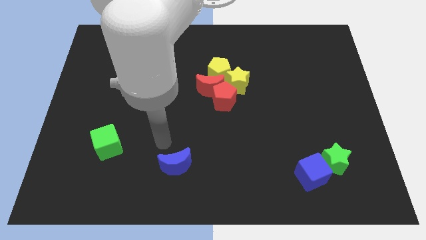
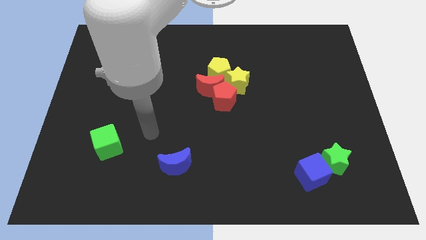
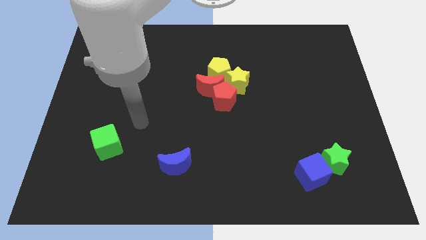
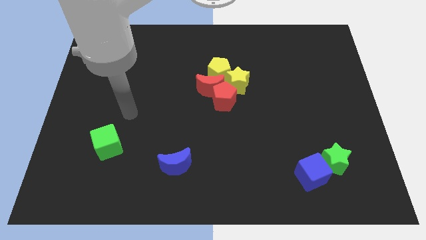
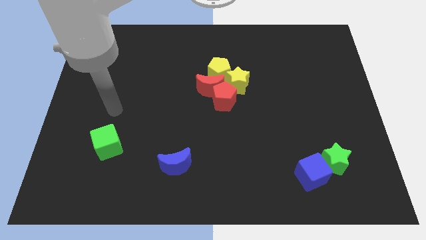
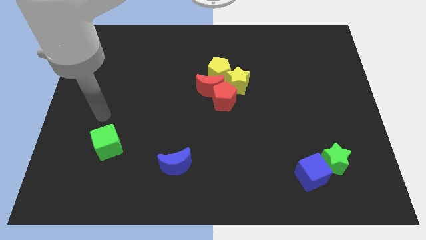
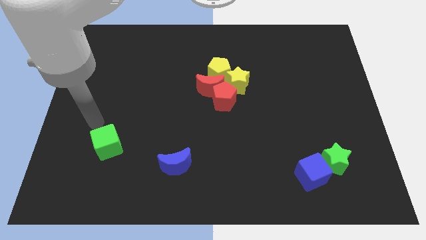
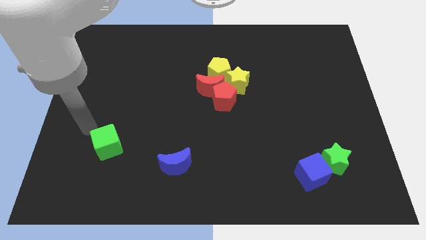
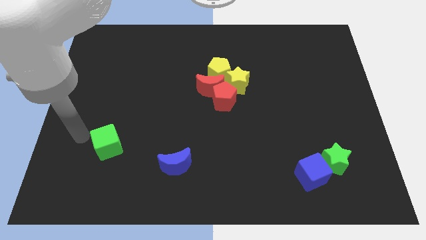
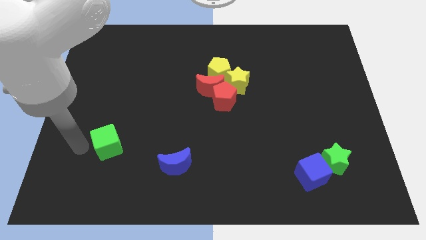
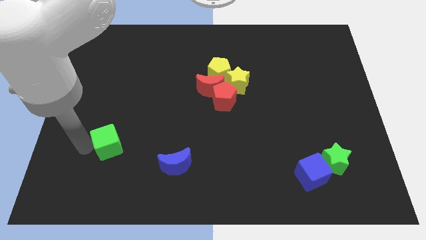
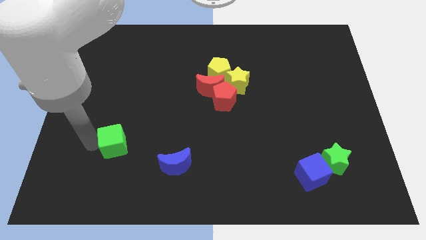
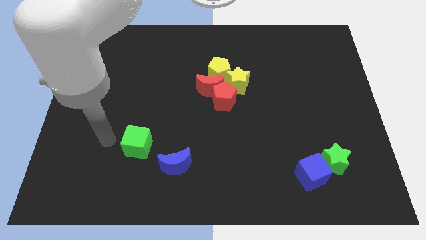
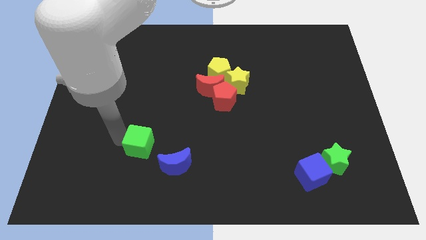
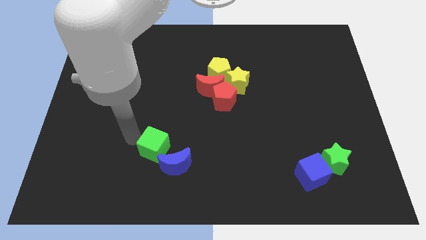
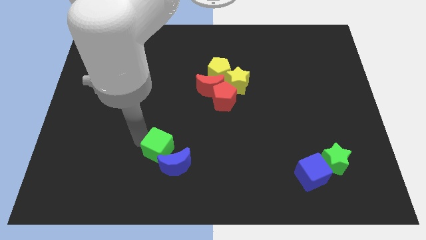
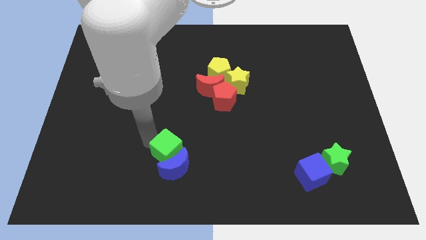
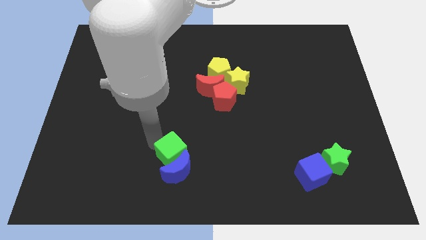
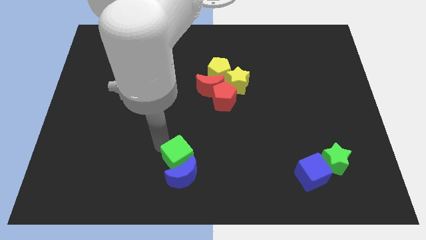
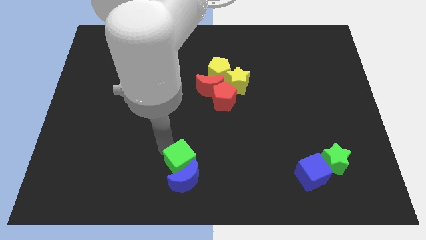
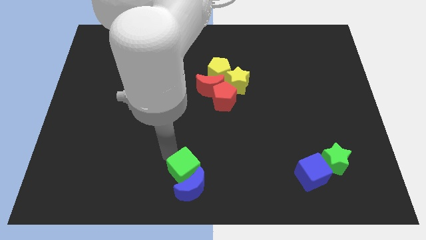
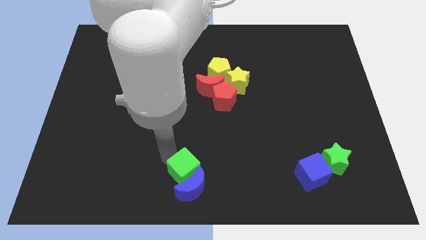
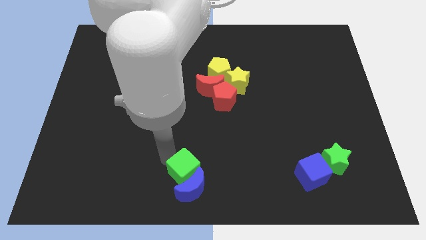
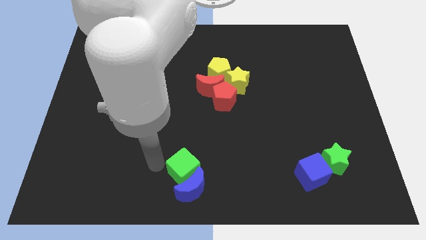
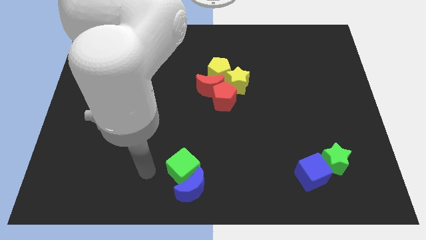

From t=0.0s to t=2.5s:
push the green cube into the blue moon

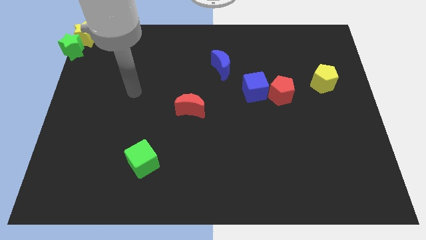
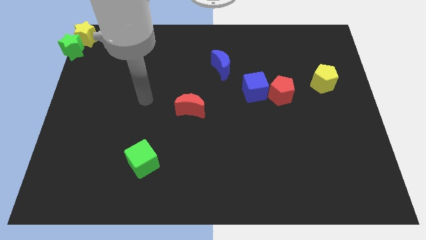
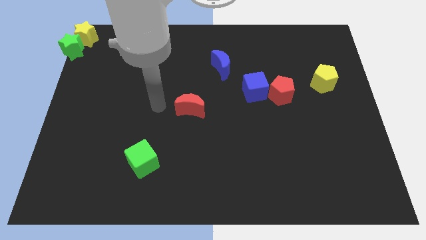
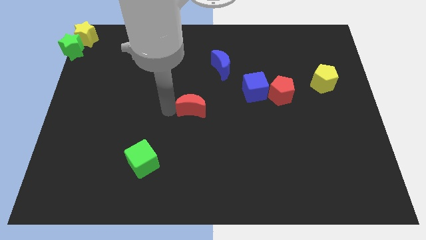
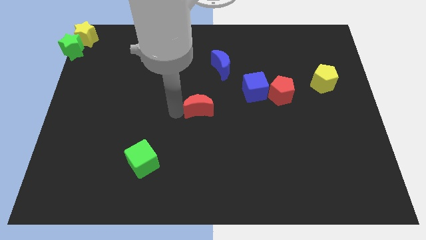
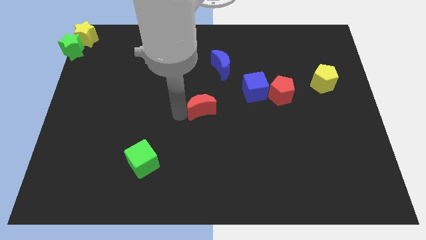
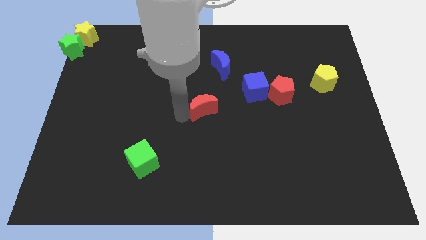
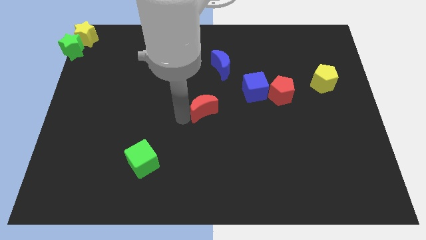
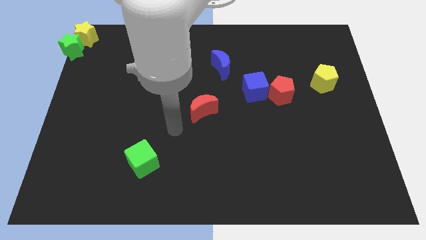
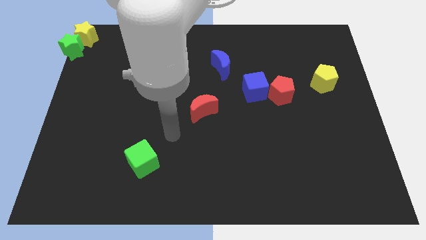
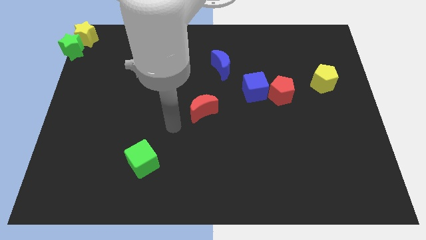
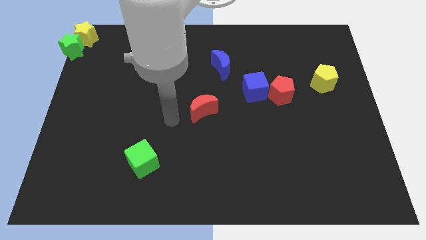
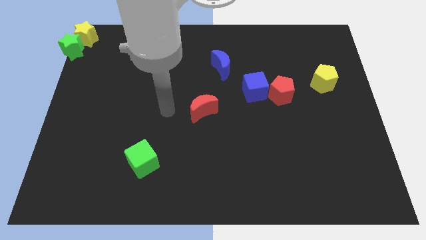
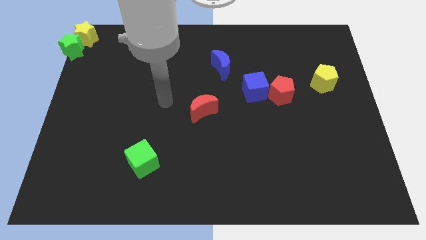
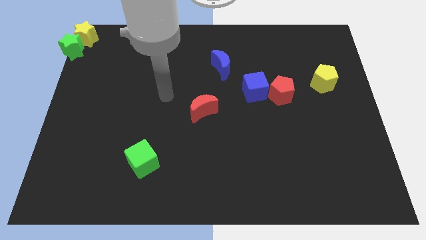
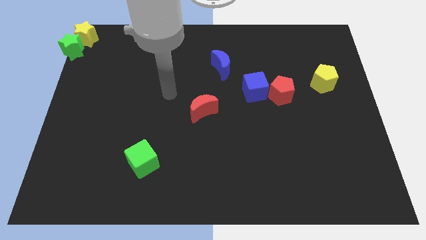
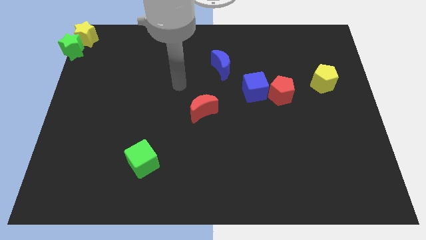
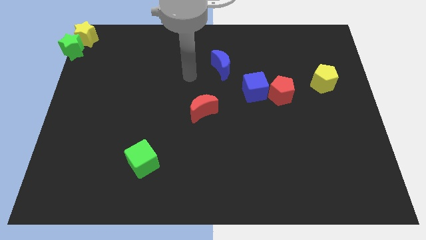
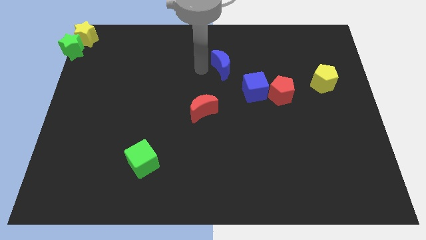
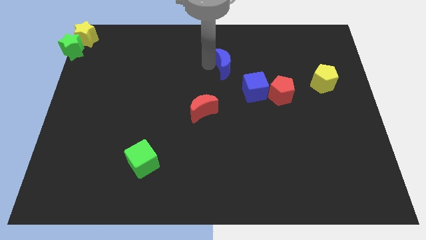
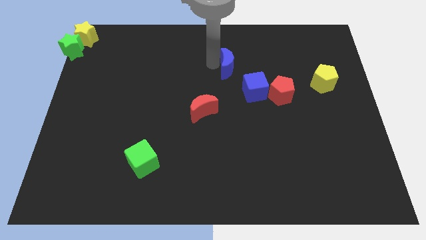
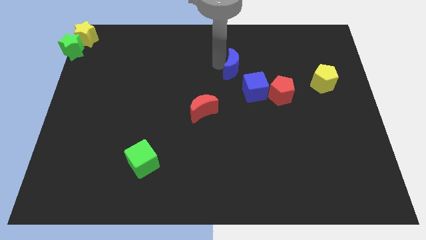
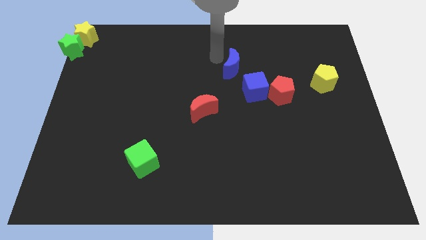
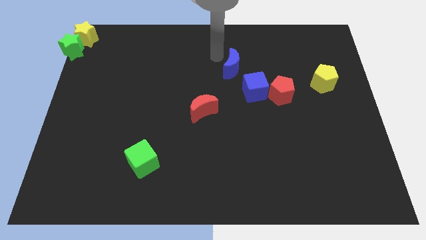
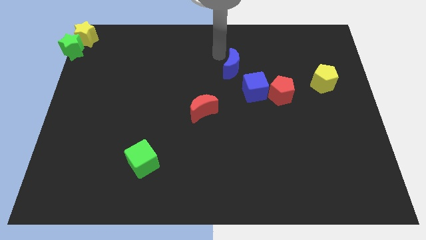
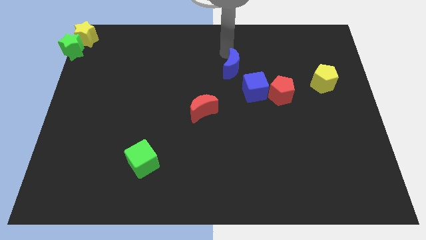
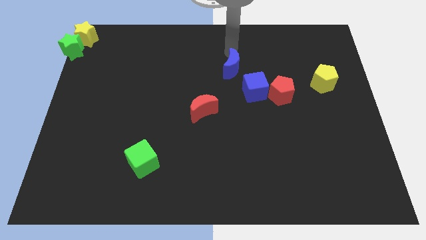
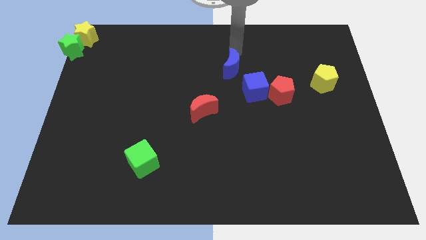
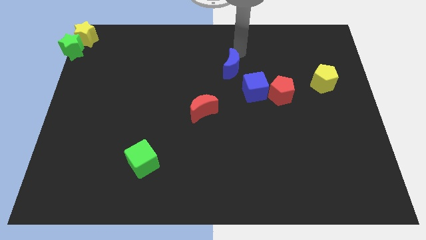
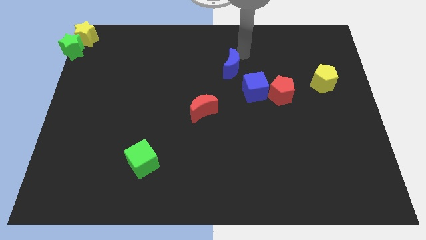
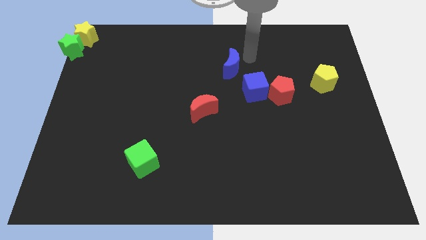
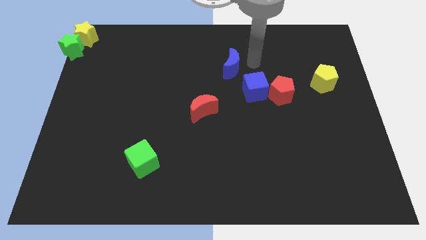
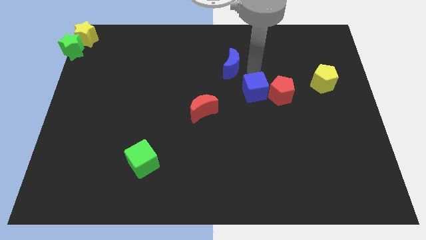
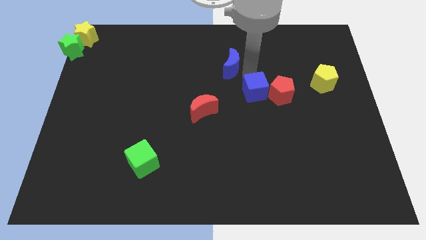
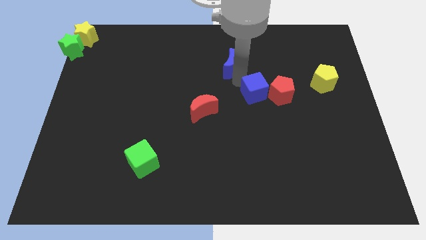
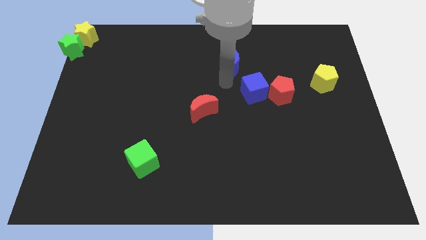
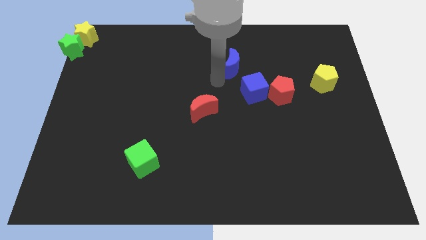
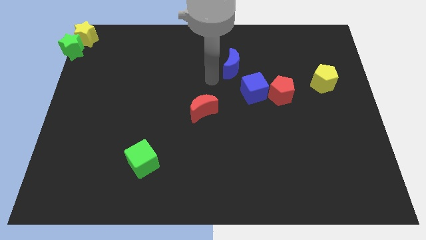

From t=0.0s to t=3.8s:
move your arm below the blue crescent

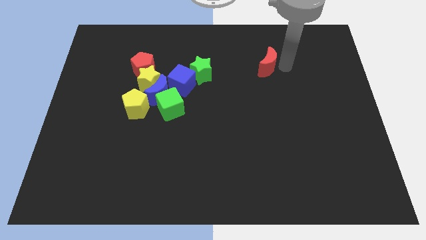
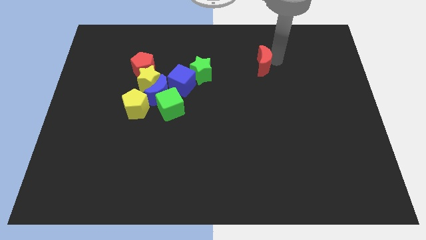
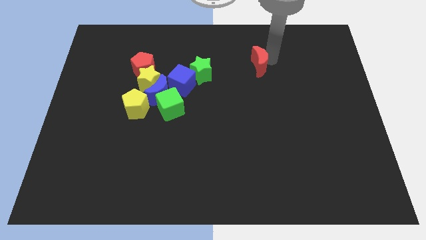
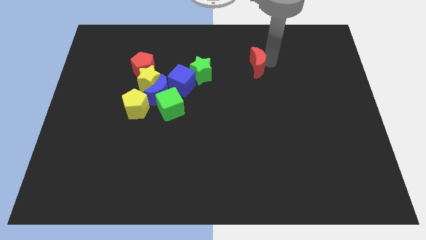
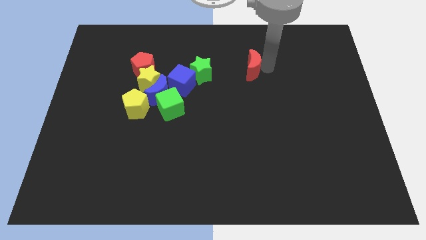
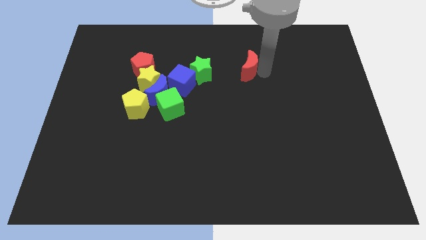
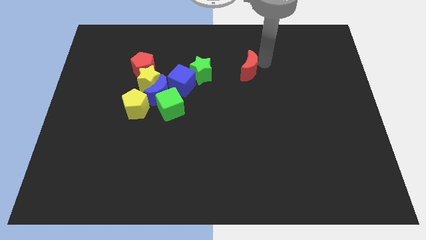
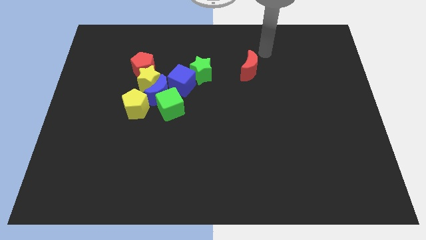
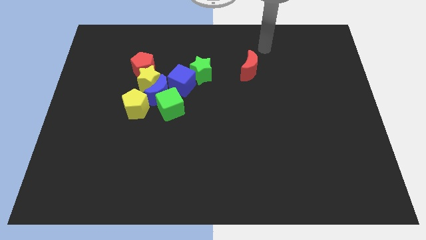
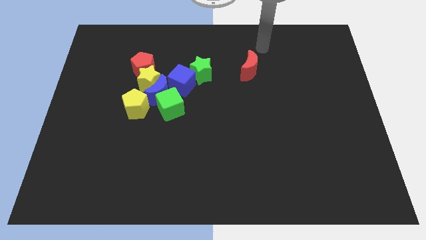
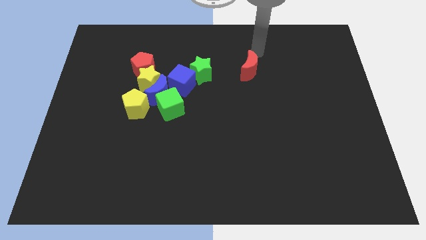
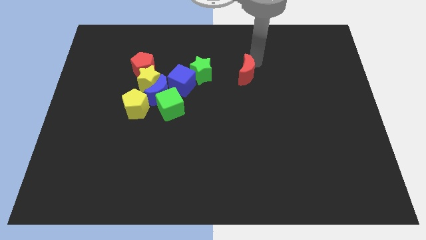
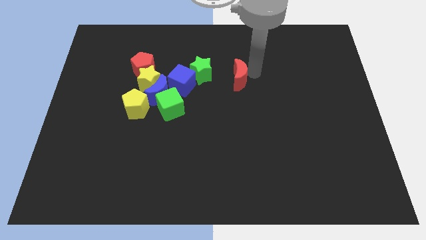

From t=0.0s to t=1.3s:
place the red crescent parallel to the green star

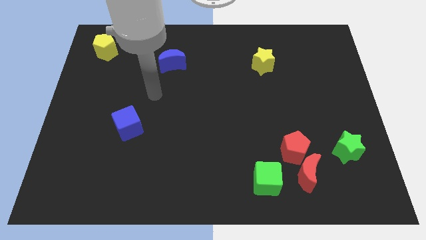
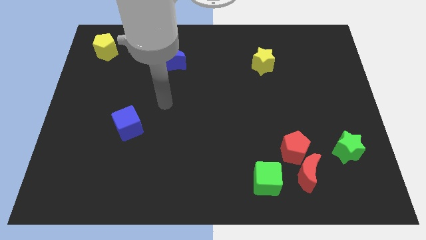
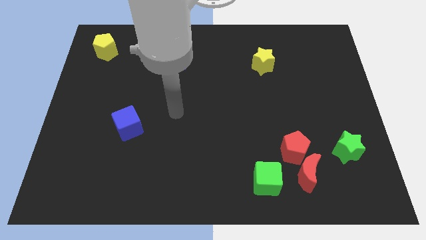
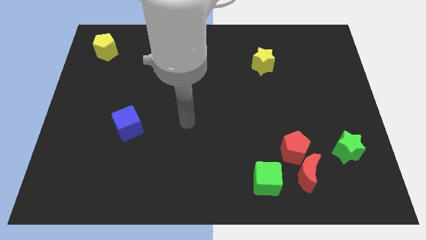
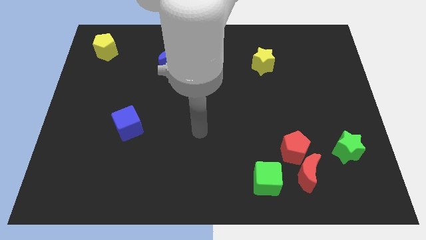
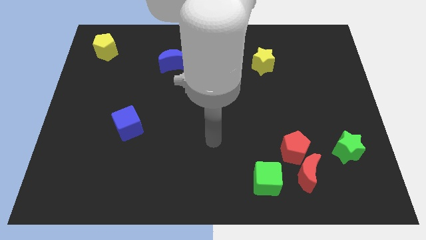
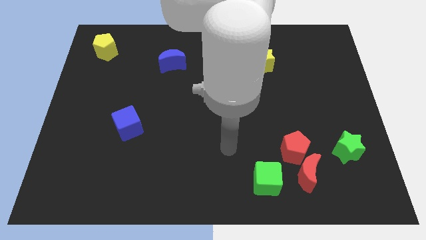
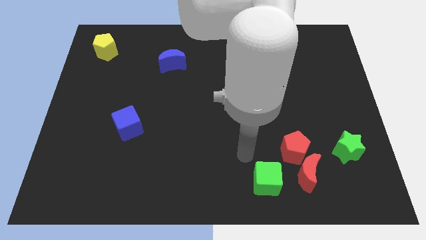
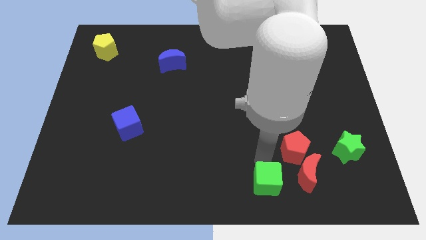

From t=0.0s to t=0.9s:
place arm on the top of green cube

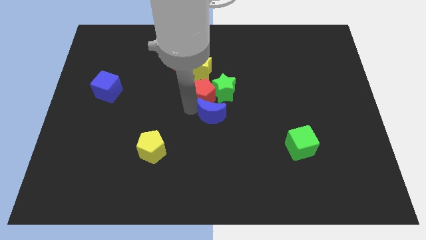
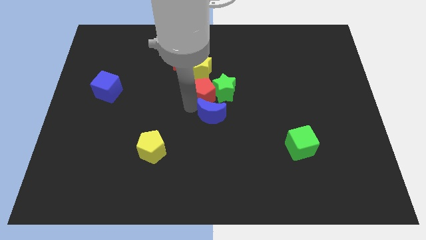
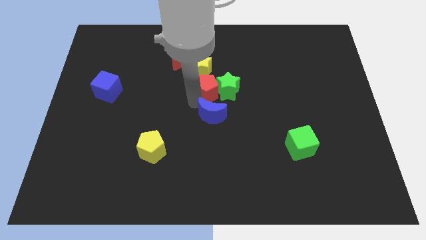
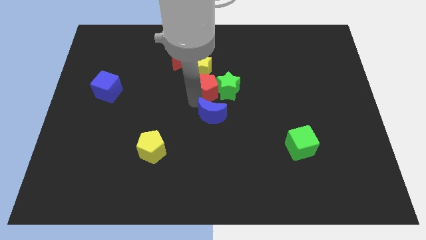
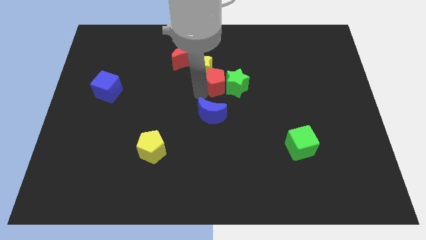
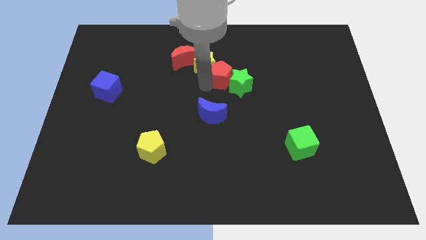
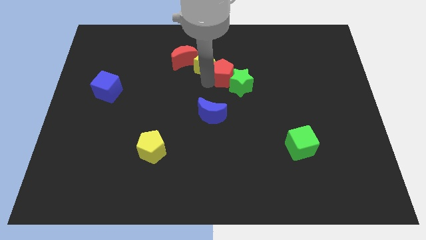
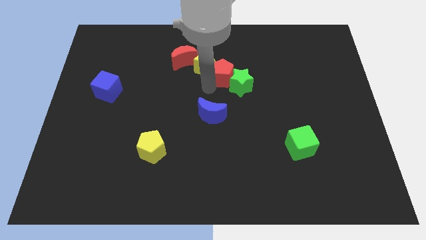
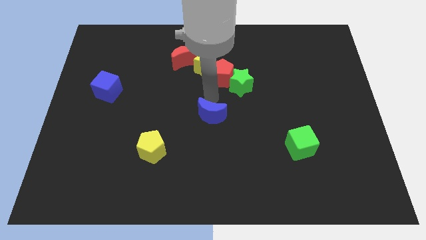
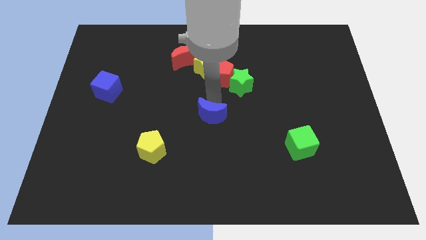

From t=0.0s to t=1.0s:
move the red pentagon in between yellow star and green star
